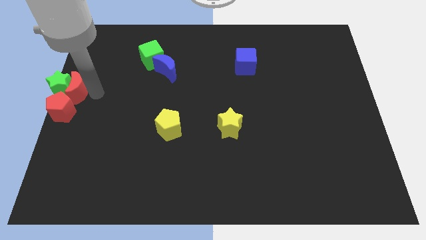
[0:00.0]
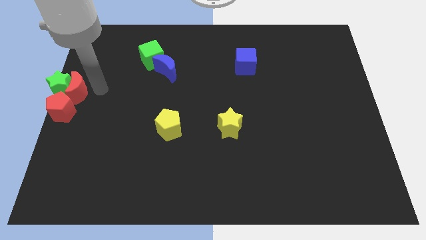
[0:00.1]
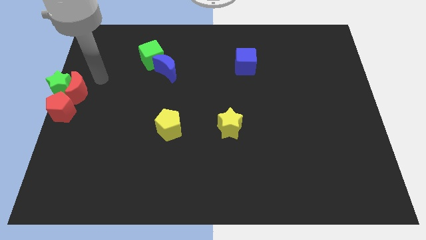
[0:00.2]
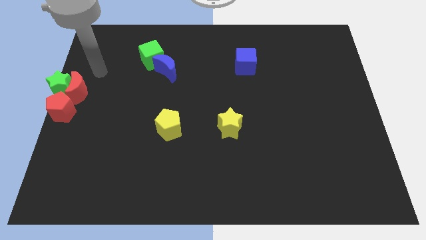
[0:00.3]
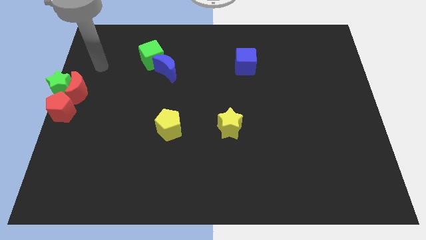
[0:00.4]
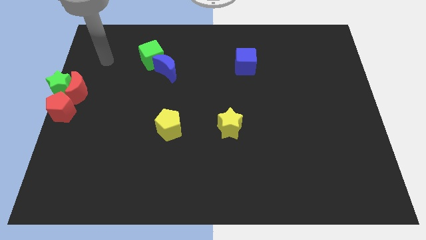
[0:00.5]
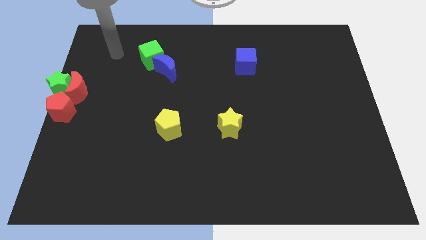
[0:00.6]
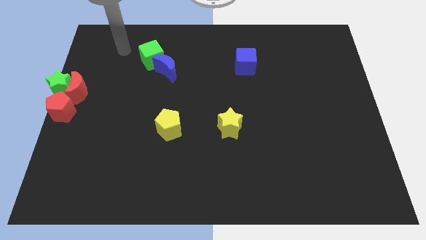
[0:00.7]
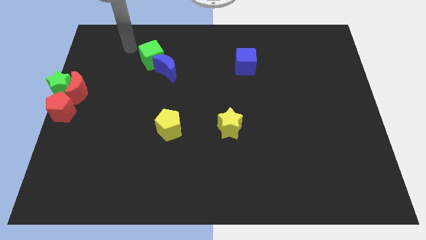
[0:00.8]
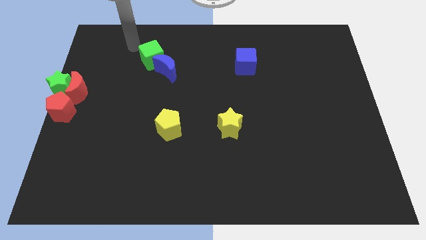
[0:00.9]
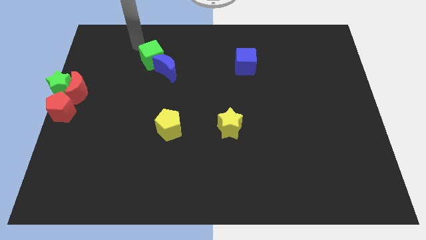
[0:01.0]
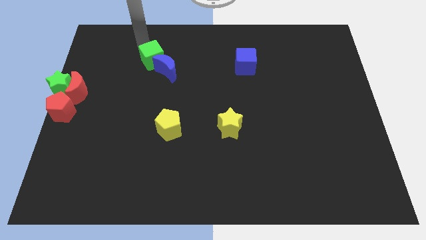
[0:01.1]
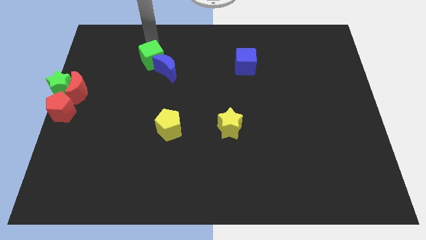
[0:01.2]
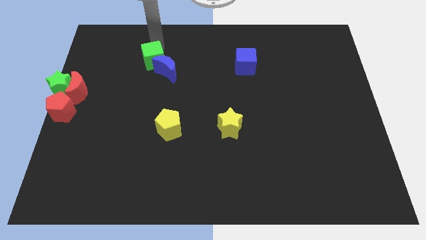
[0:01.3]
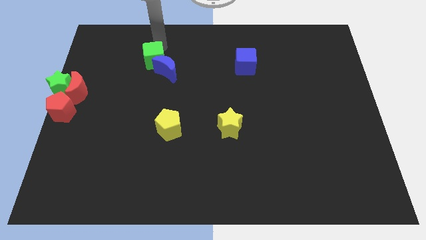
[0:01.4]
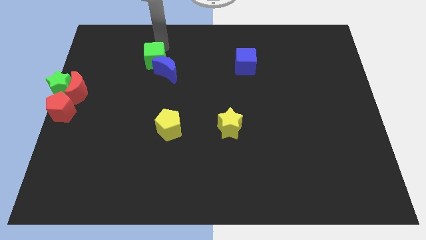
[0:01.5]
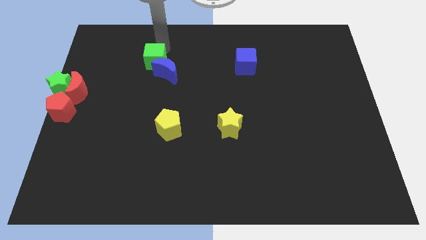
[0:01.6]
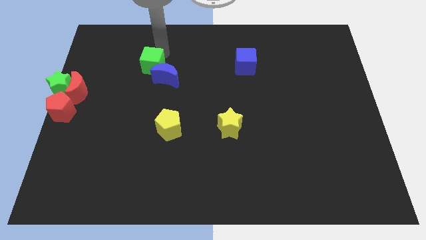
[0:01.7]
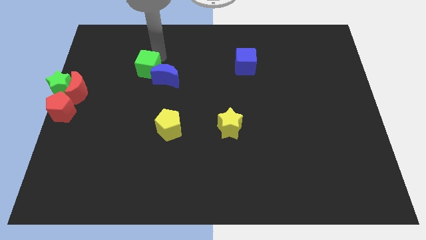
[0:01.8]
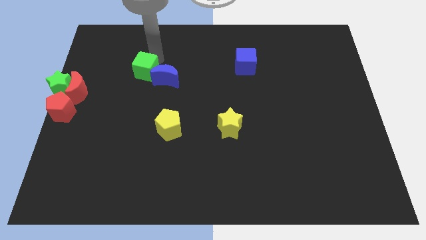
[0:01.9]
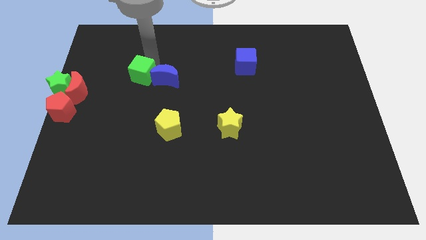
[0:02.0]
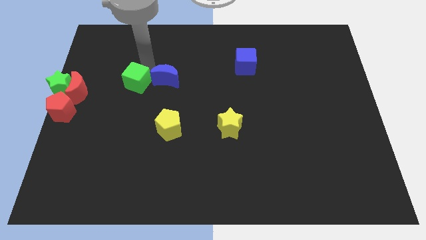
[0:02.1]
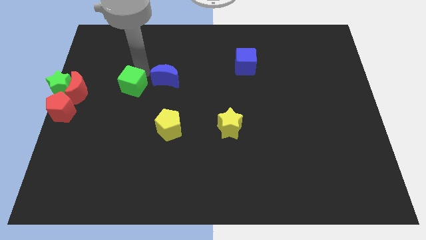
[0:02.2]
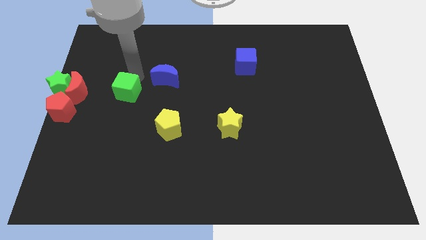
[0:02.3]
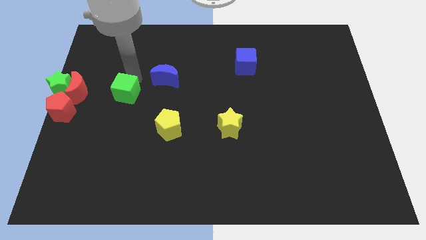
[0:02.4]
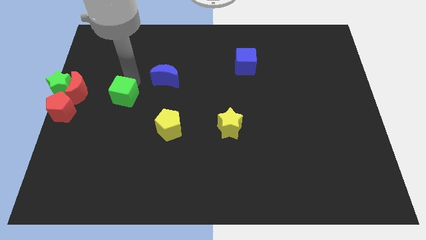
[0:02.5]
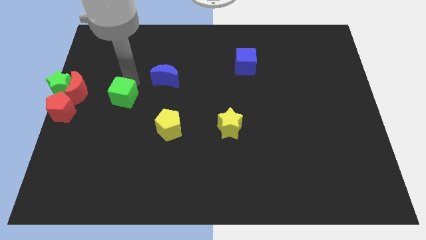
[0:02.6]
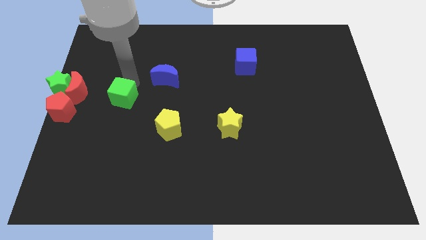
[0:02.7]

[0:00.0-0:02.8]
move the green cube away from the blue crescent

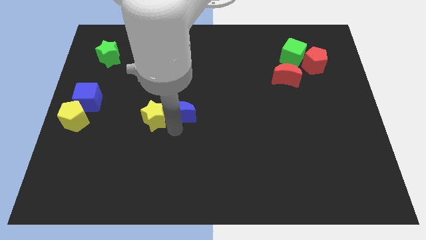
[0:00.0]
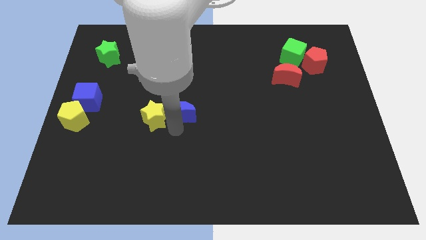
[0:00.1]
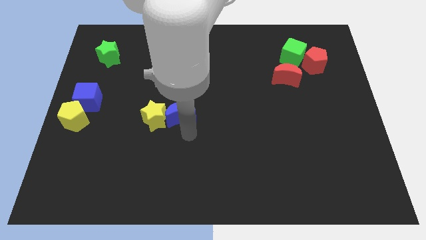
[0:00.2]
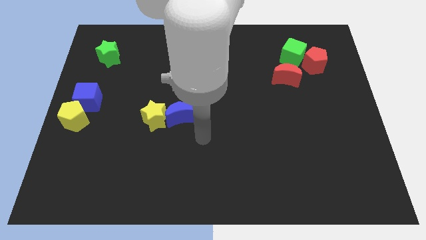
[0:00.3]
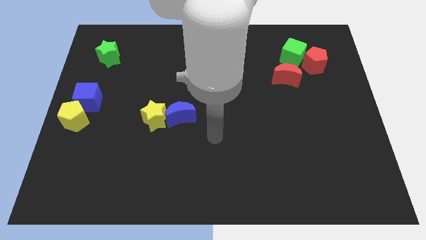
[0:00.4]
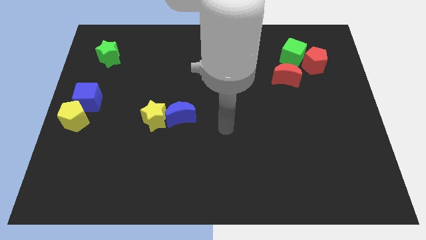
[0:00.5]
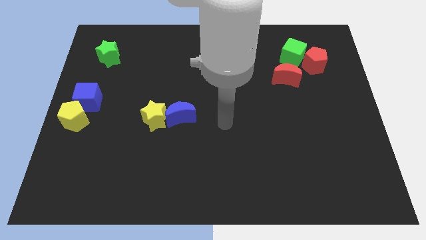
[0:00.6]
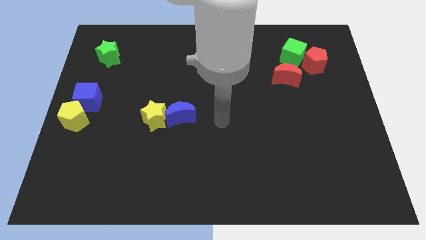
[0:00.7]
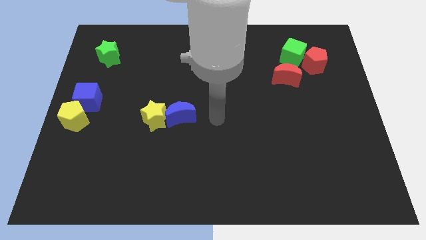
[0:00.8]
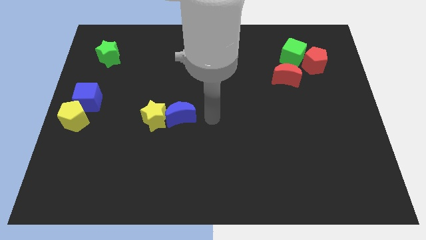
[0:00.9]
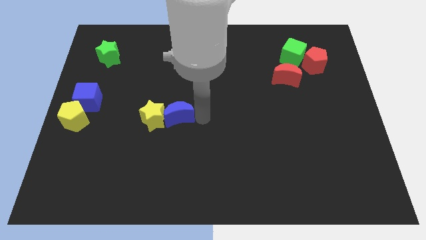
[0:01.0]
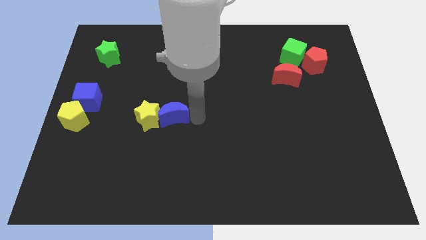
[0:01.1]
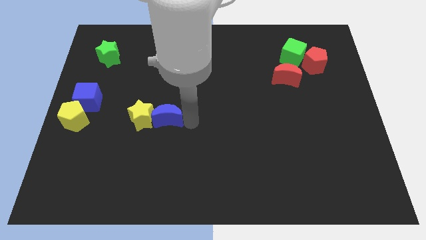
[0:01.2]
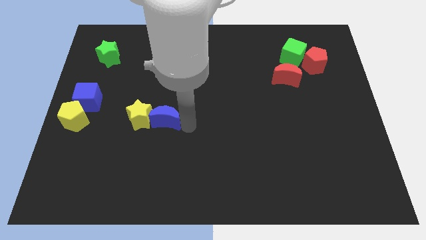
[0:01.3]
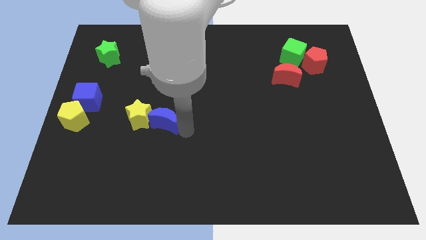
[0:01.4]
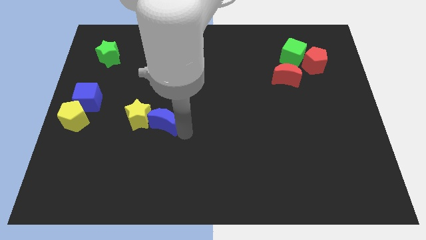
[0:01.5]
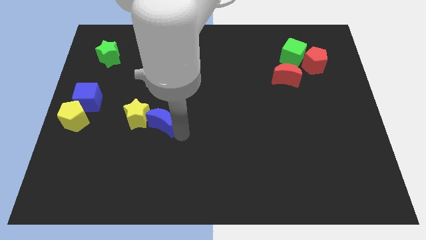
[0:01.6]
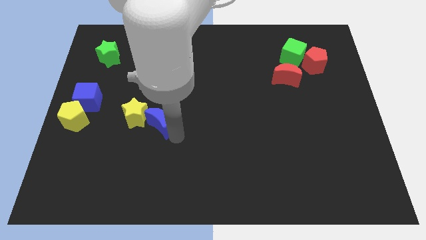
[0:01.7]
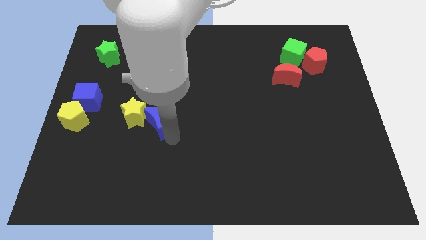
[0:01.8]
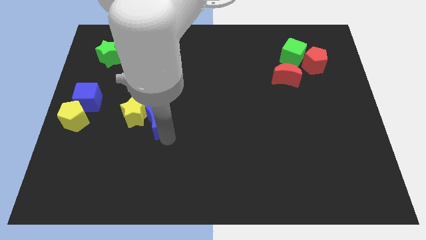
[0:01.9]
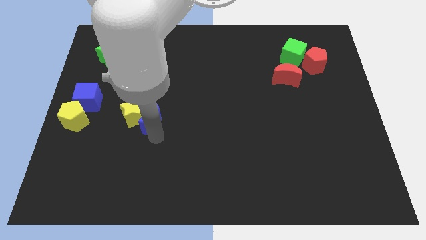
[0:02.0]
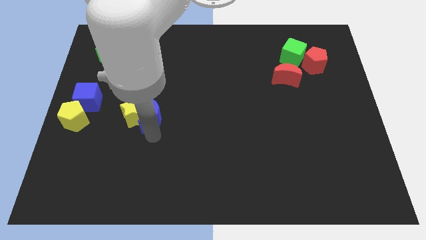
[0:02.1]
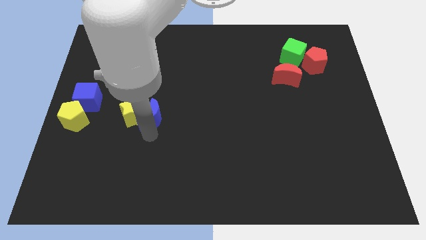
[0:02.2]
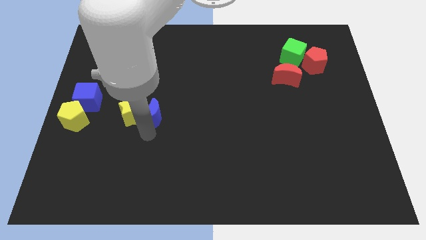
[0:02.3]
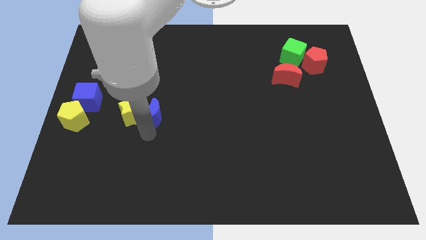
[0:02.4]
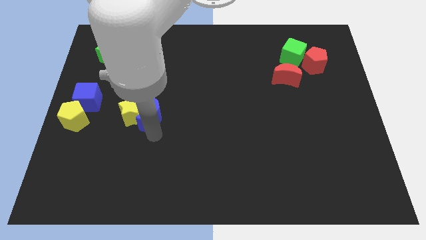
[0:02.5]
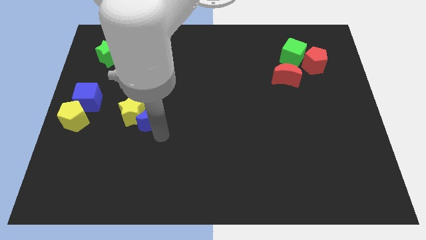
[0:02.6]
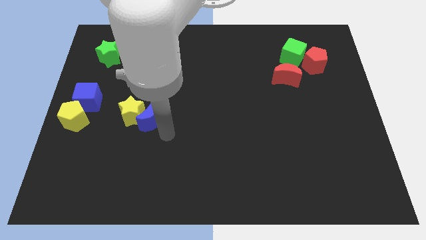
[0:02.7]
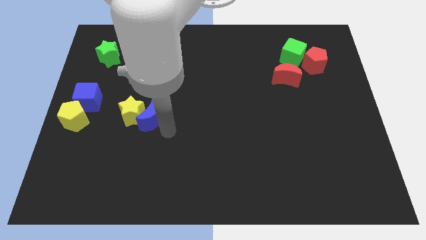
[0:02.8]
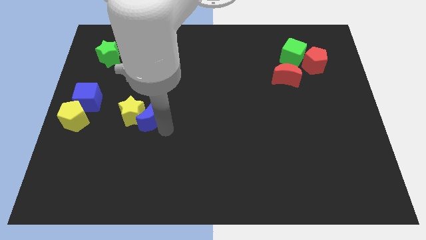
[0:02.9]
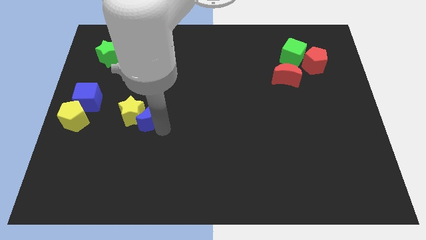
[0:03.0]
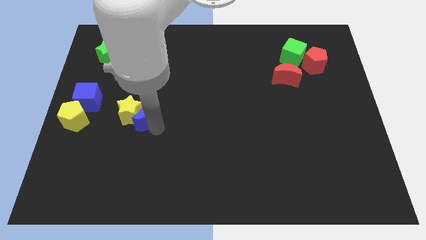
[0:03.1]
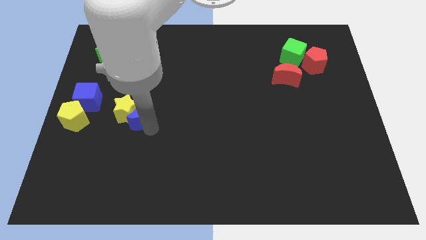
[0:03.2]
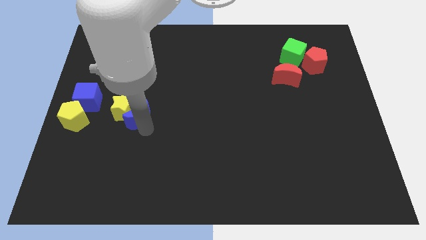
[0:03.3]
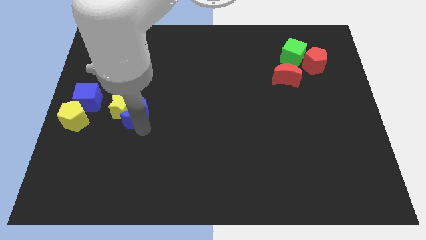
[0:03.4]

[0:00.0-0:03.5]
move the the yellow star and blue moon towards the center left side of the board

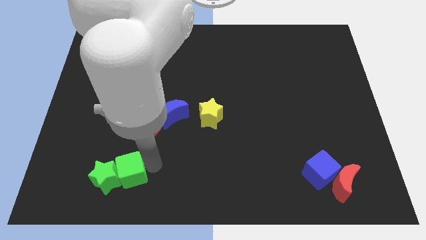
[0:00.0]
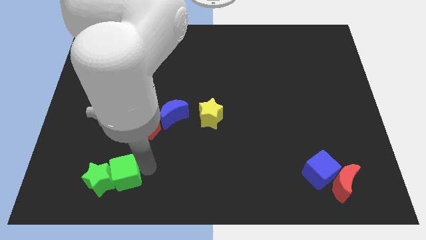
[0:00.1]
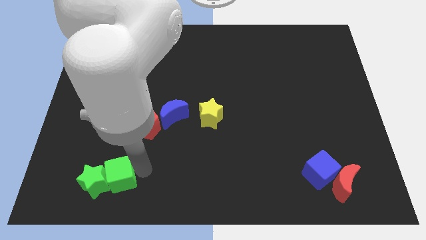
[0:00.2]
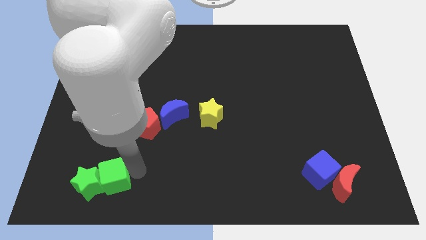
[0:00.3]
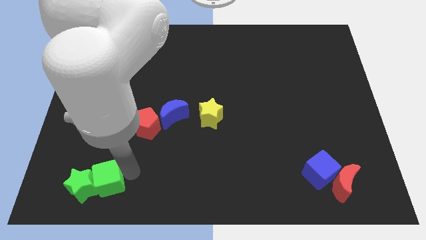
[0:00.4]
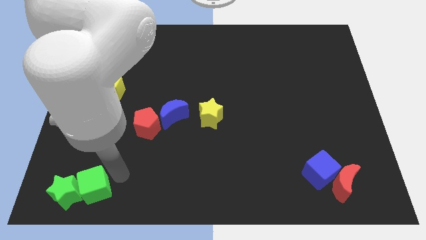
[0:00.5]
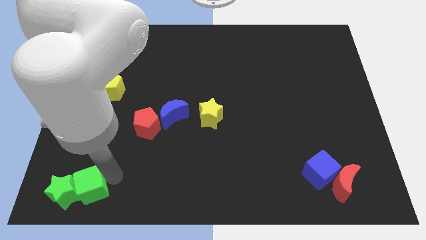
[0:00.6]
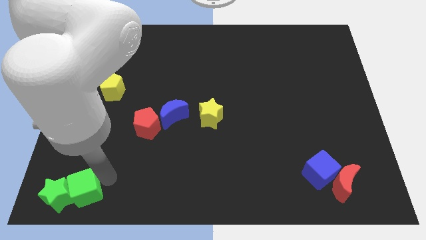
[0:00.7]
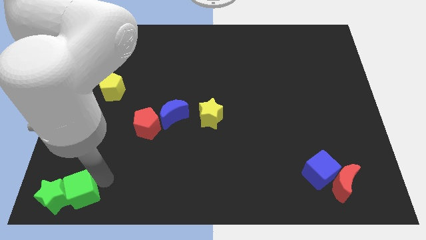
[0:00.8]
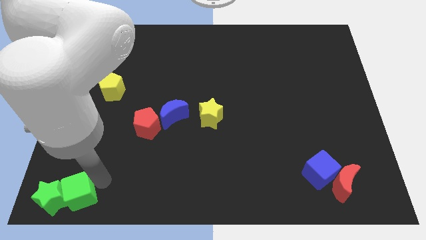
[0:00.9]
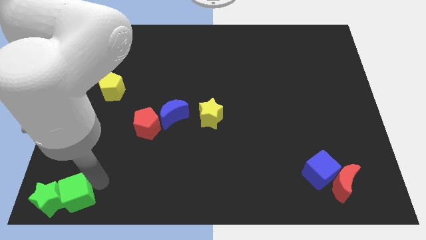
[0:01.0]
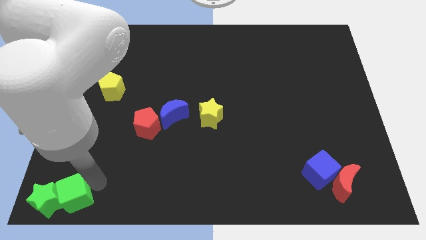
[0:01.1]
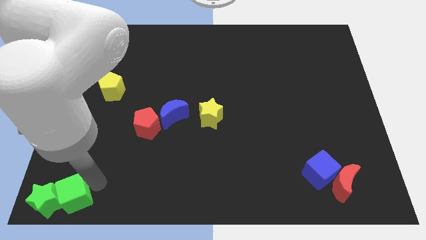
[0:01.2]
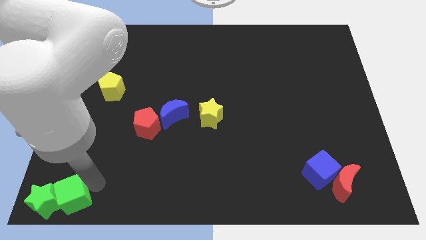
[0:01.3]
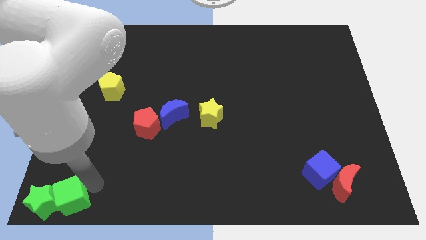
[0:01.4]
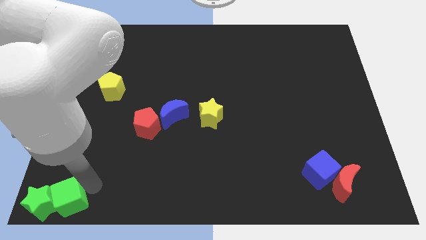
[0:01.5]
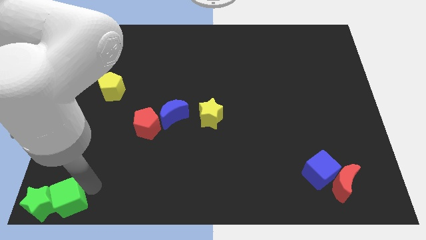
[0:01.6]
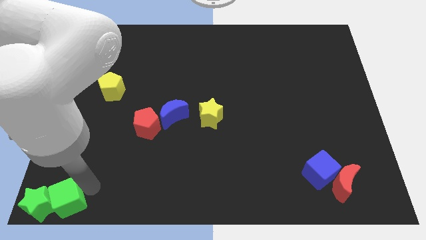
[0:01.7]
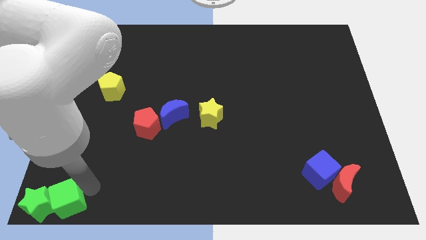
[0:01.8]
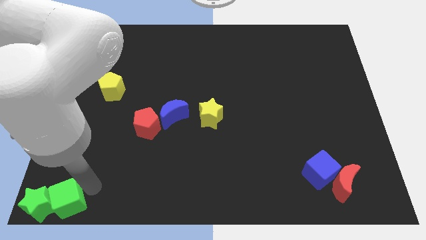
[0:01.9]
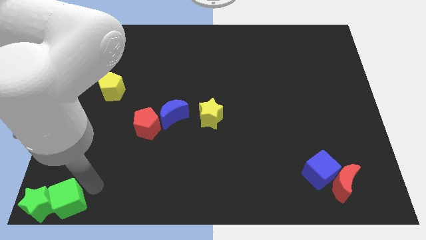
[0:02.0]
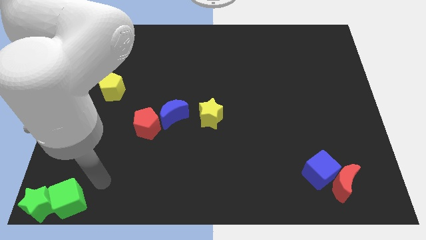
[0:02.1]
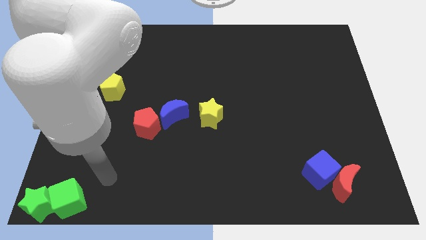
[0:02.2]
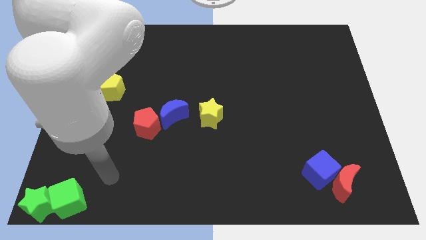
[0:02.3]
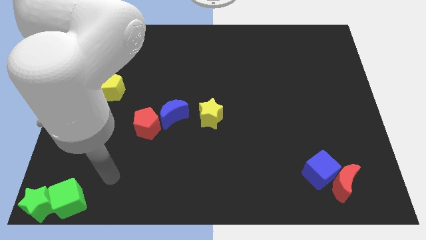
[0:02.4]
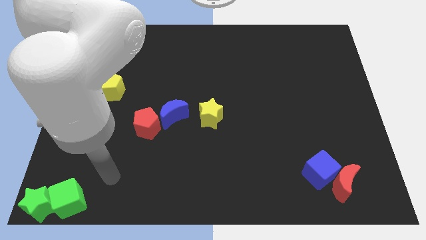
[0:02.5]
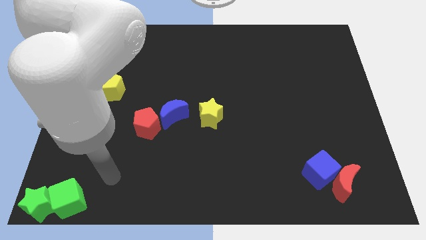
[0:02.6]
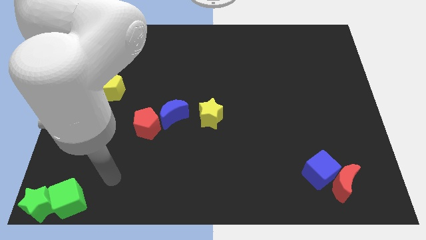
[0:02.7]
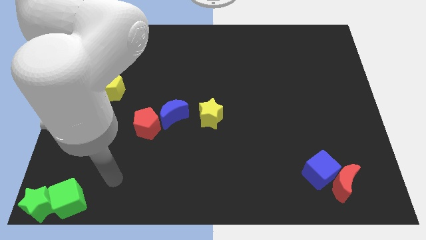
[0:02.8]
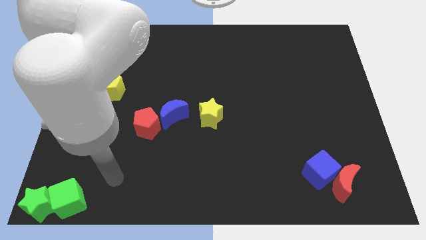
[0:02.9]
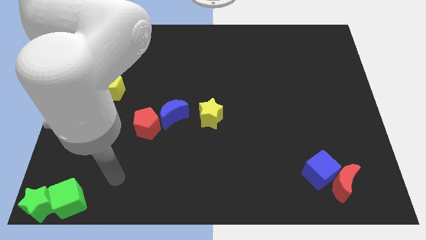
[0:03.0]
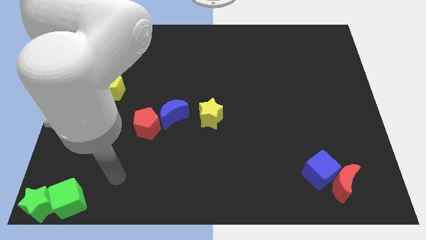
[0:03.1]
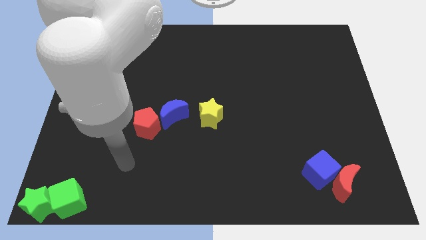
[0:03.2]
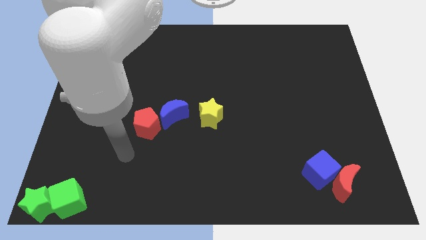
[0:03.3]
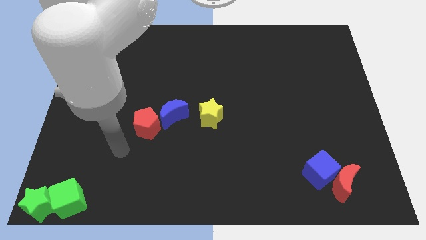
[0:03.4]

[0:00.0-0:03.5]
place the green star and green cube at the bottom left corner of the board
